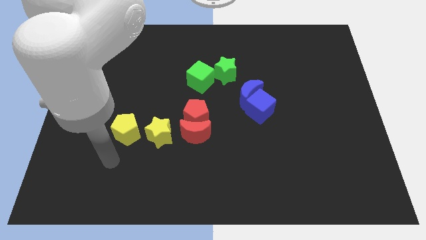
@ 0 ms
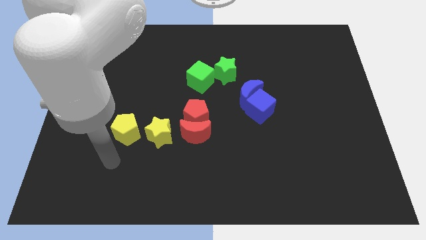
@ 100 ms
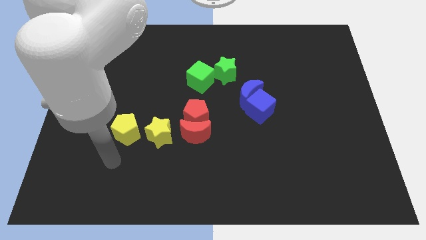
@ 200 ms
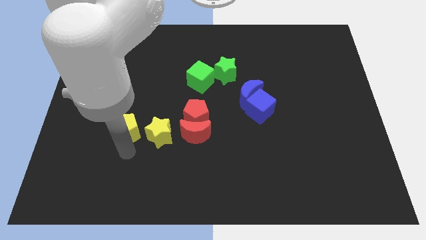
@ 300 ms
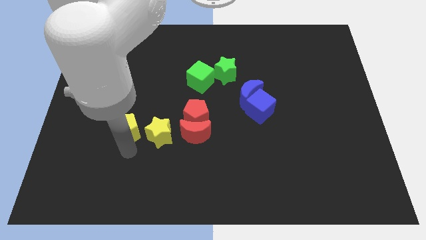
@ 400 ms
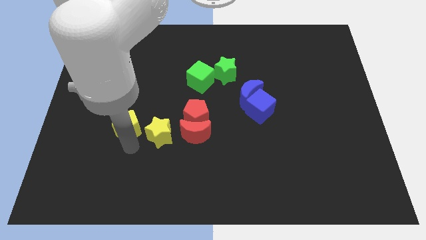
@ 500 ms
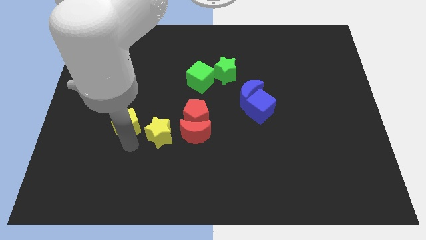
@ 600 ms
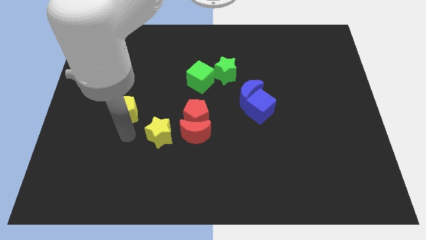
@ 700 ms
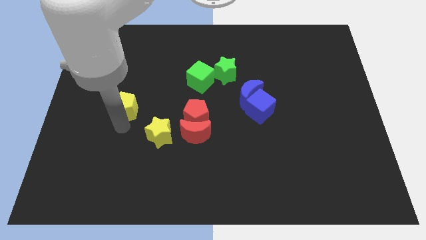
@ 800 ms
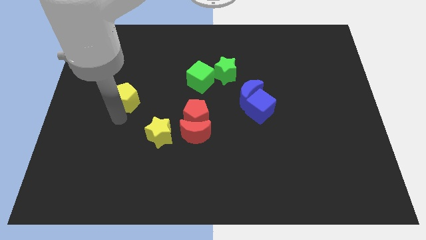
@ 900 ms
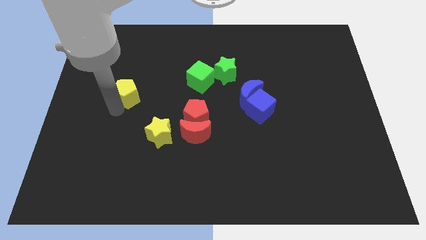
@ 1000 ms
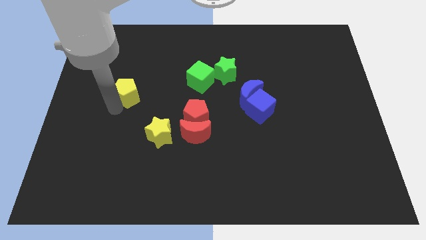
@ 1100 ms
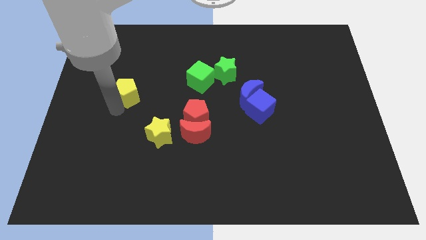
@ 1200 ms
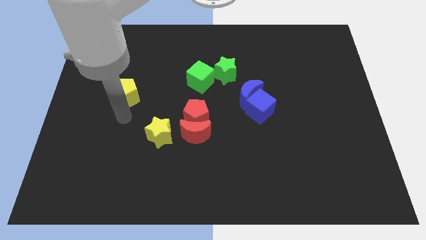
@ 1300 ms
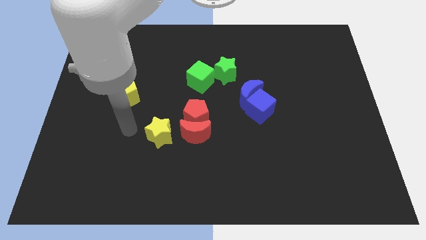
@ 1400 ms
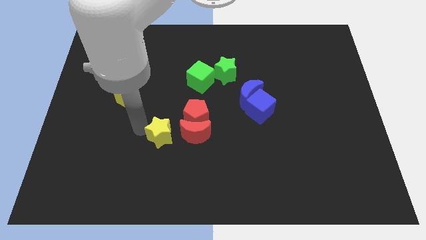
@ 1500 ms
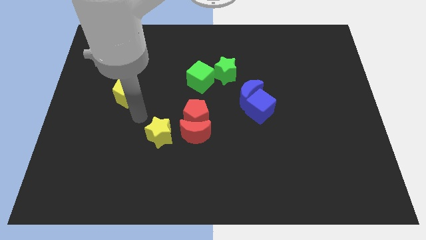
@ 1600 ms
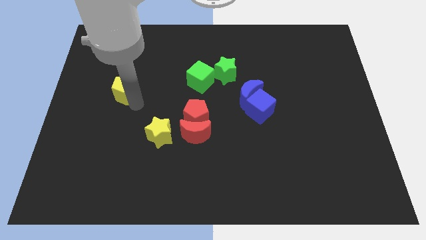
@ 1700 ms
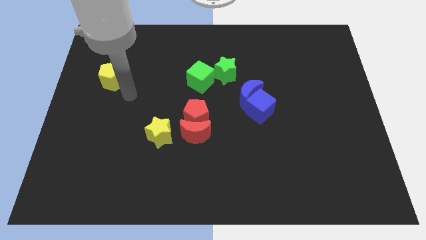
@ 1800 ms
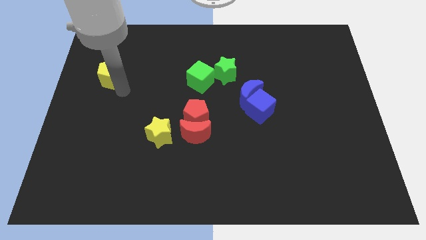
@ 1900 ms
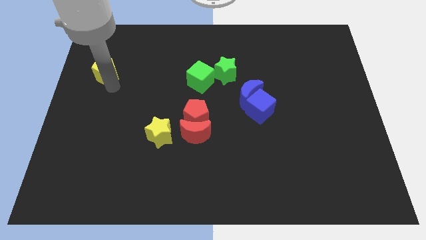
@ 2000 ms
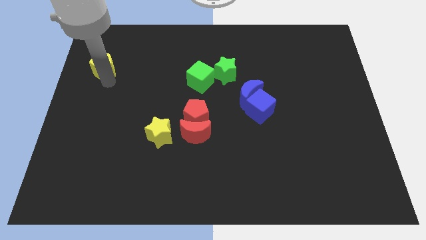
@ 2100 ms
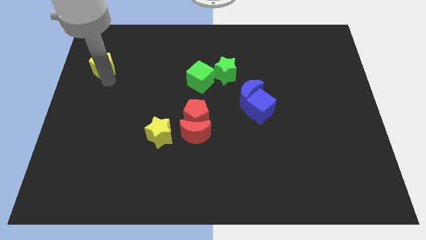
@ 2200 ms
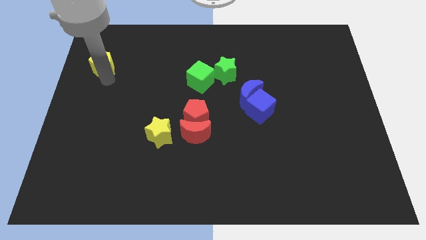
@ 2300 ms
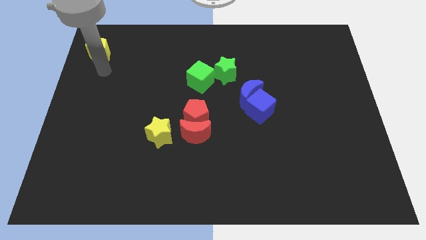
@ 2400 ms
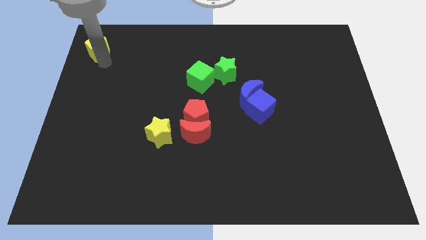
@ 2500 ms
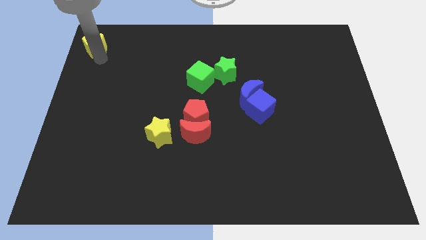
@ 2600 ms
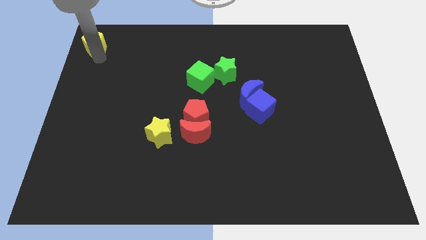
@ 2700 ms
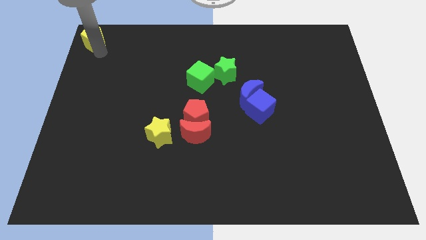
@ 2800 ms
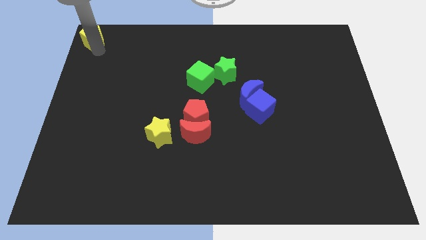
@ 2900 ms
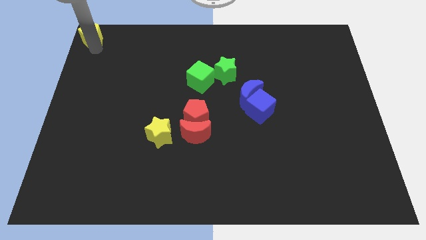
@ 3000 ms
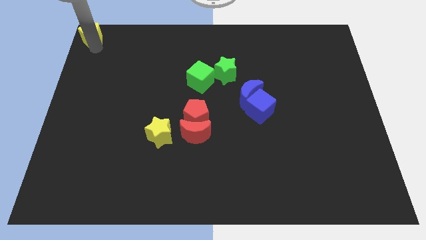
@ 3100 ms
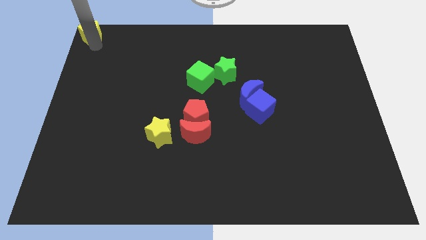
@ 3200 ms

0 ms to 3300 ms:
place the yellow pentagon at the top left corner of the board

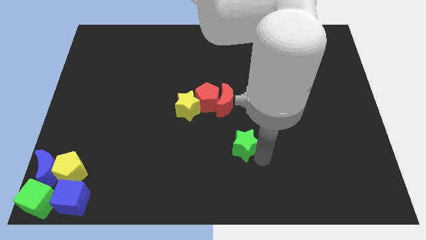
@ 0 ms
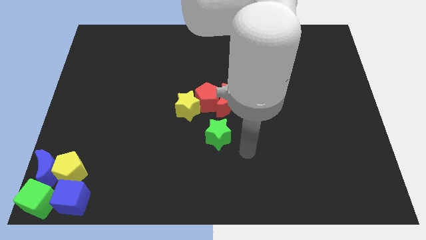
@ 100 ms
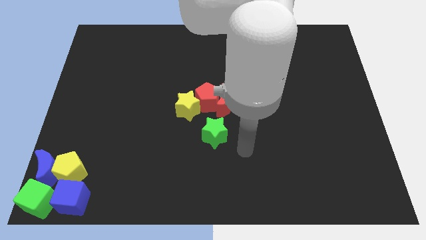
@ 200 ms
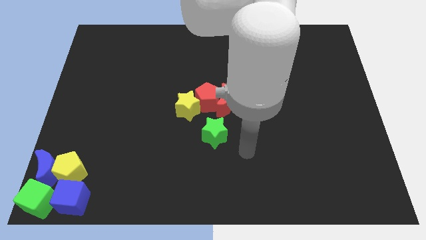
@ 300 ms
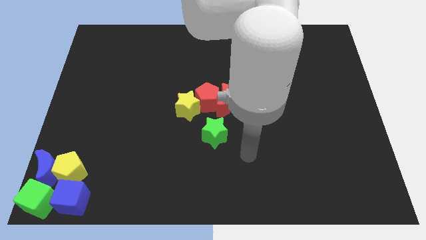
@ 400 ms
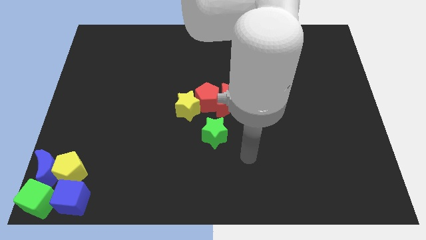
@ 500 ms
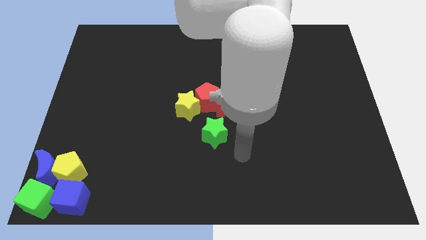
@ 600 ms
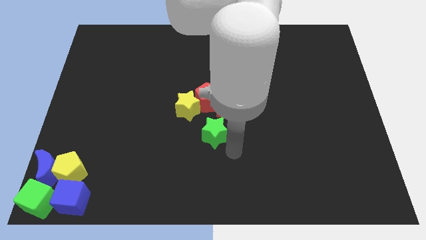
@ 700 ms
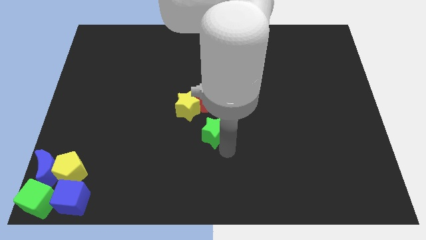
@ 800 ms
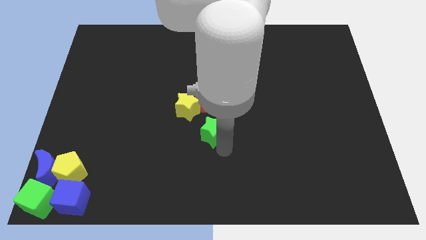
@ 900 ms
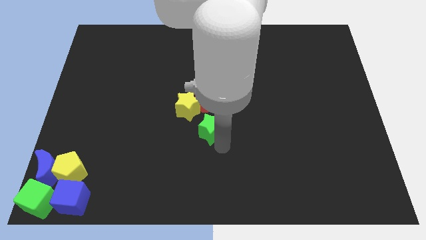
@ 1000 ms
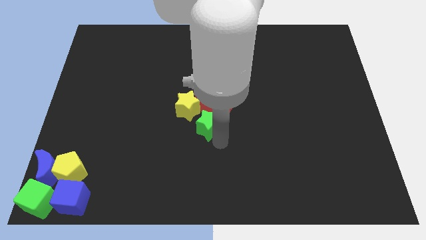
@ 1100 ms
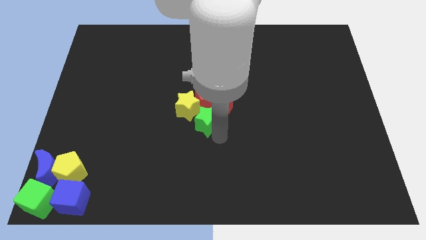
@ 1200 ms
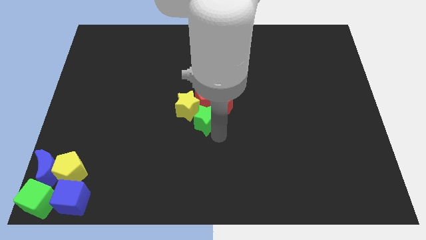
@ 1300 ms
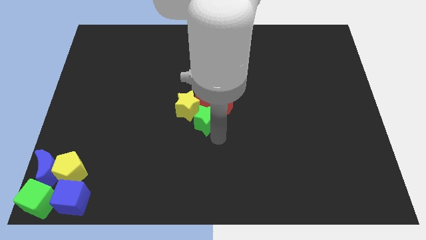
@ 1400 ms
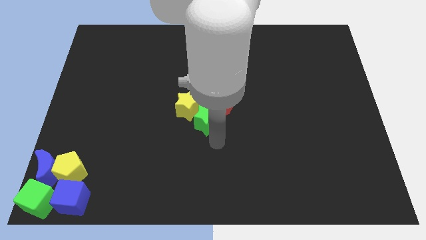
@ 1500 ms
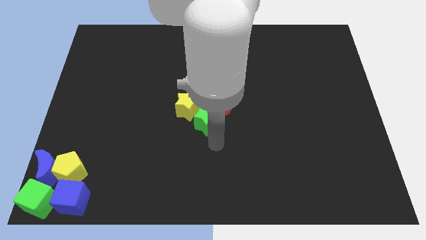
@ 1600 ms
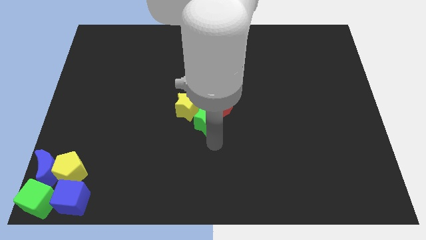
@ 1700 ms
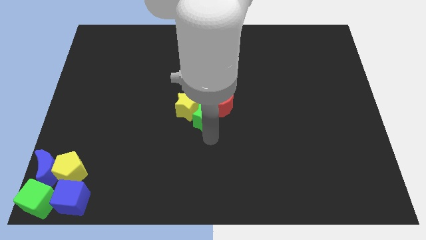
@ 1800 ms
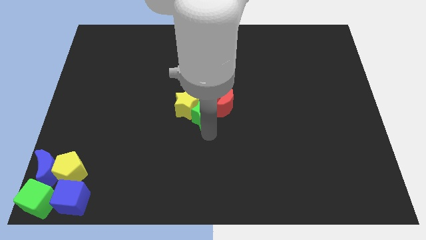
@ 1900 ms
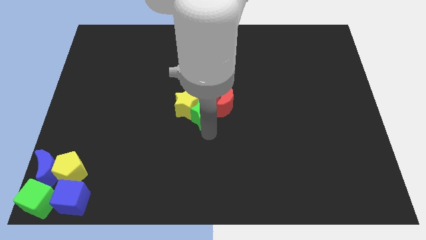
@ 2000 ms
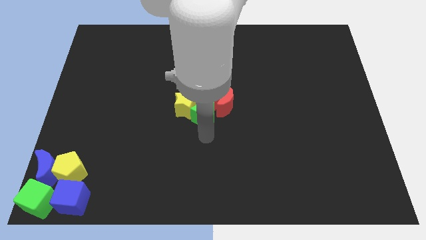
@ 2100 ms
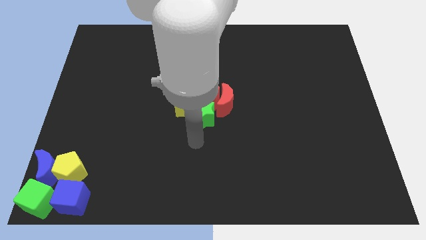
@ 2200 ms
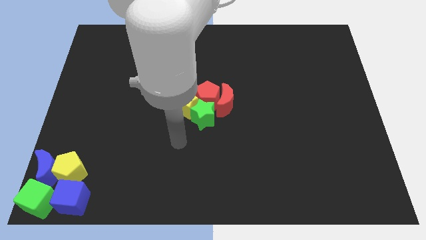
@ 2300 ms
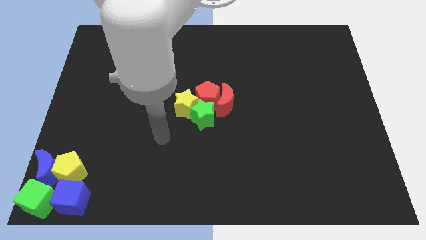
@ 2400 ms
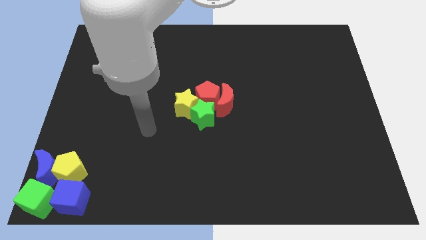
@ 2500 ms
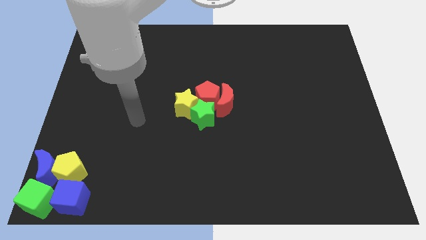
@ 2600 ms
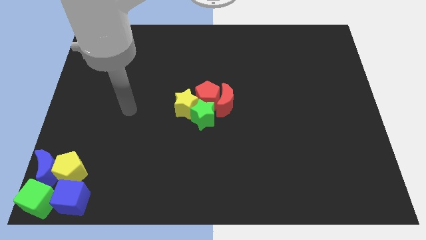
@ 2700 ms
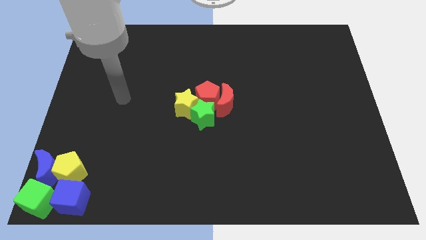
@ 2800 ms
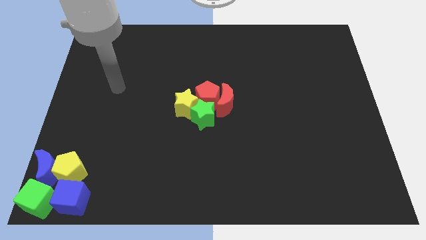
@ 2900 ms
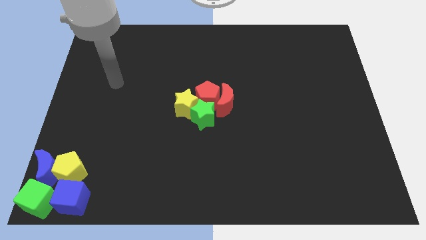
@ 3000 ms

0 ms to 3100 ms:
push the green star into the yellow star

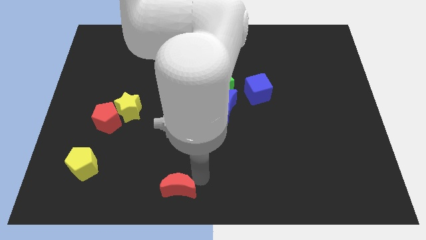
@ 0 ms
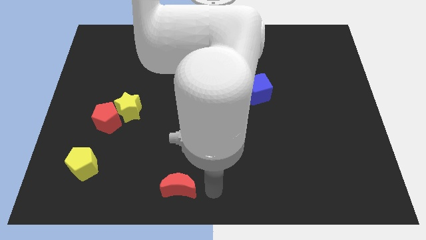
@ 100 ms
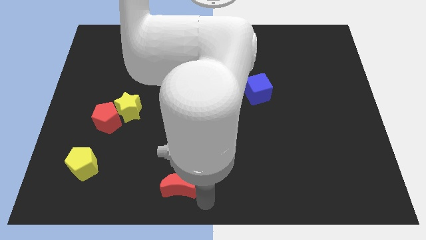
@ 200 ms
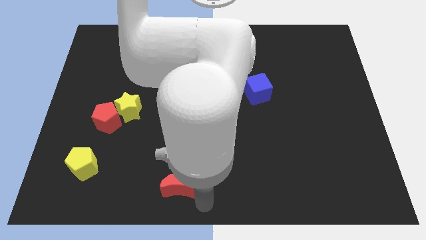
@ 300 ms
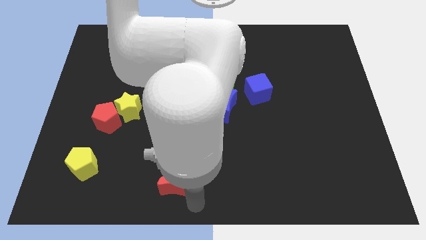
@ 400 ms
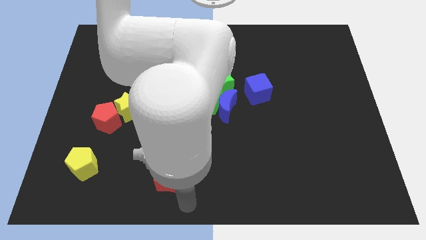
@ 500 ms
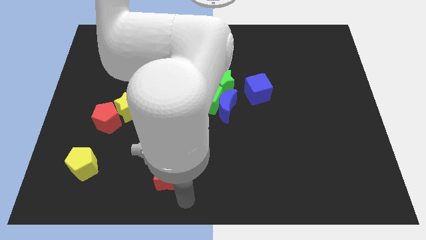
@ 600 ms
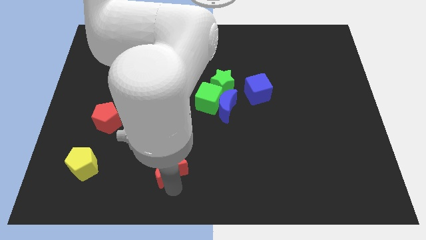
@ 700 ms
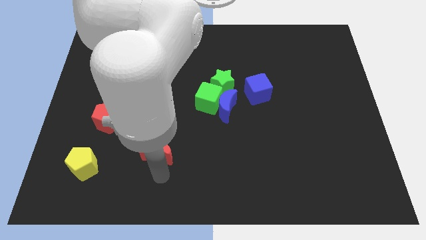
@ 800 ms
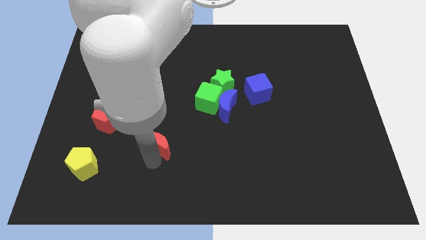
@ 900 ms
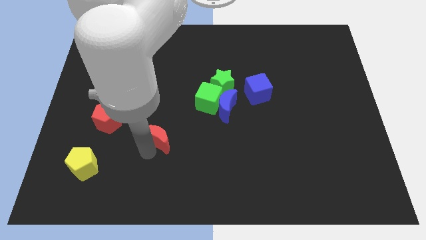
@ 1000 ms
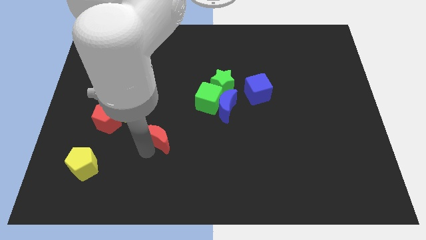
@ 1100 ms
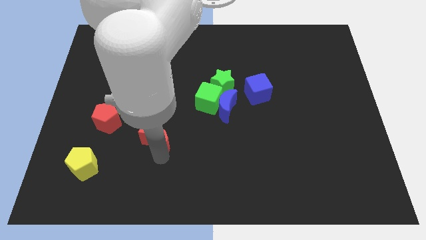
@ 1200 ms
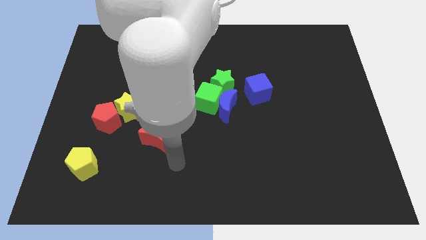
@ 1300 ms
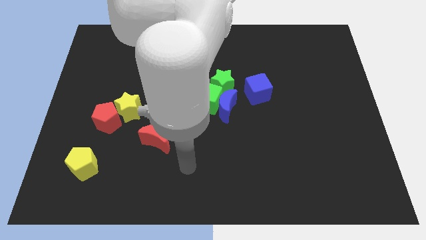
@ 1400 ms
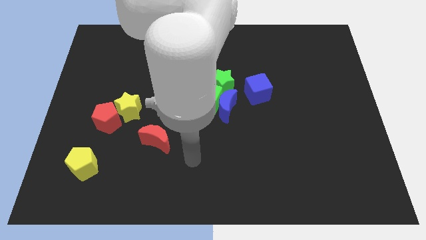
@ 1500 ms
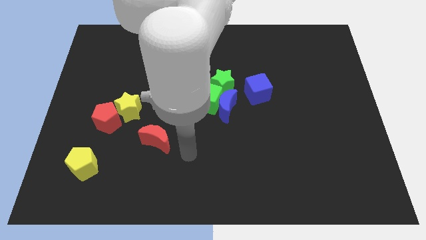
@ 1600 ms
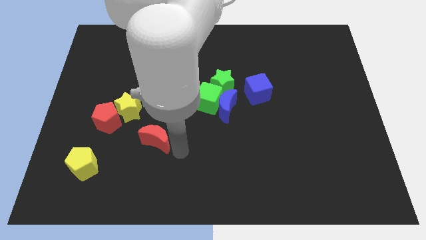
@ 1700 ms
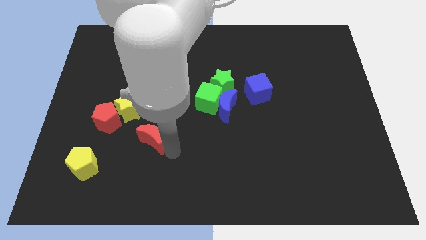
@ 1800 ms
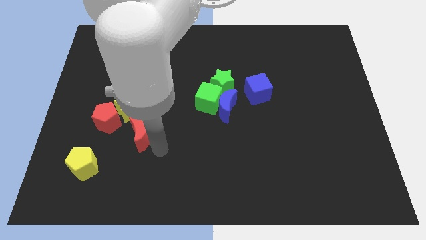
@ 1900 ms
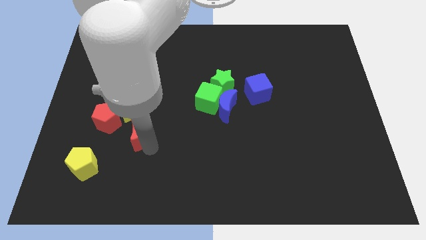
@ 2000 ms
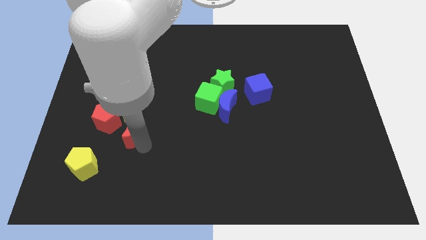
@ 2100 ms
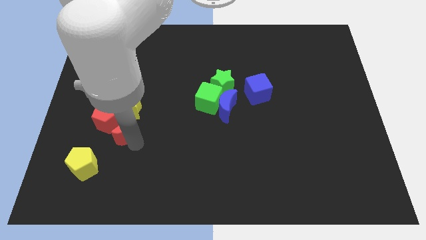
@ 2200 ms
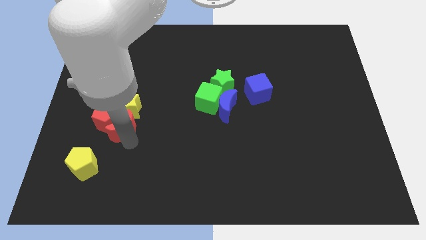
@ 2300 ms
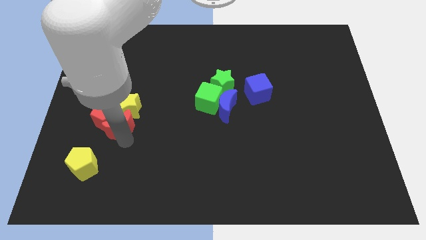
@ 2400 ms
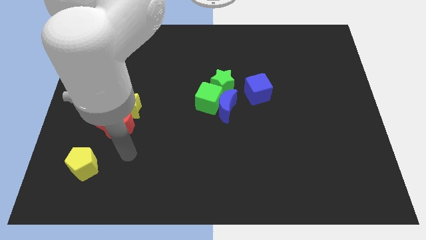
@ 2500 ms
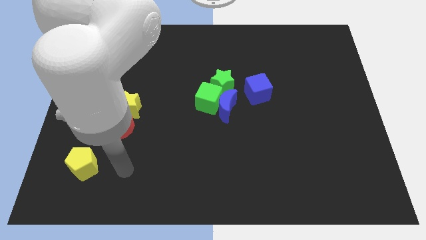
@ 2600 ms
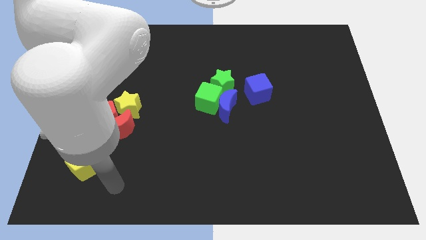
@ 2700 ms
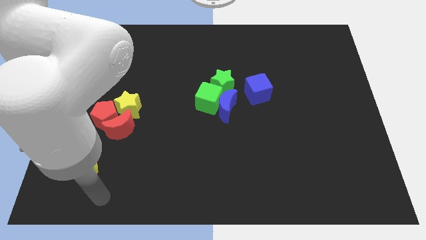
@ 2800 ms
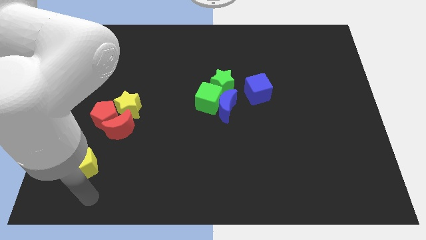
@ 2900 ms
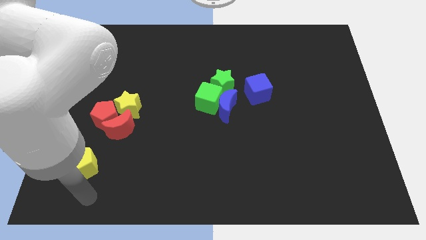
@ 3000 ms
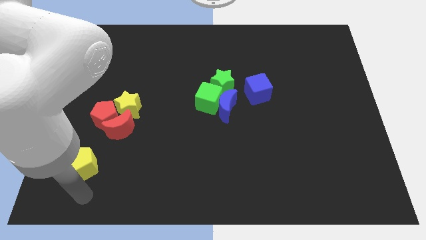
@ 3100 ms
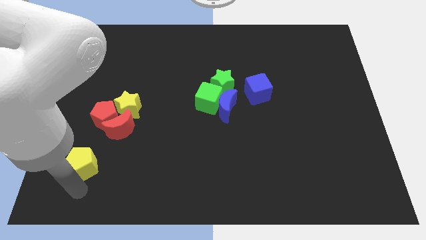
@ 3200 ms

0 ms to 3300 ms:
move the red crescent close to the red pentagon
